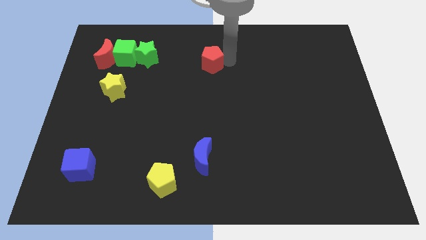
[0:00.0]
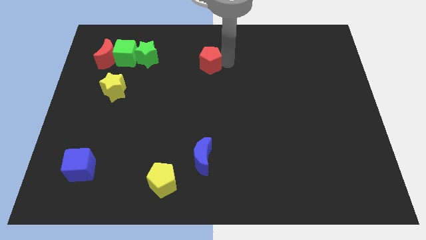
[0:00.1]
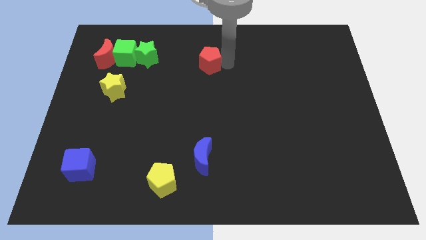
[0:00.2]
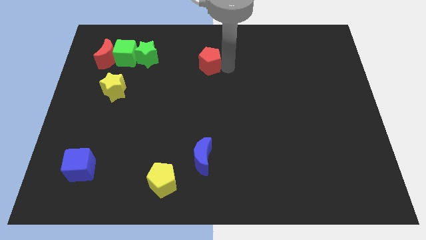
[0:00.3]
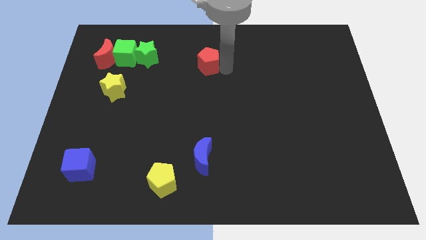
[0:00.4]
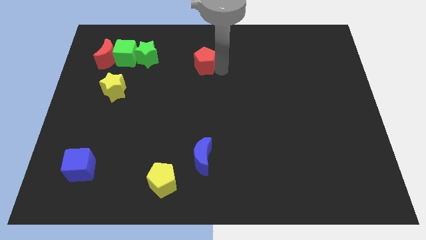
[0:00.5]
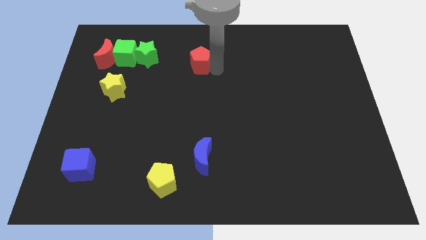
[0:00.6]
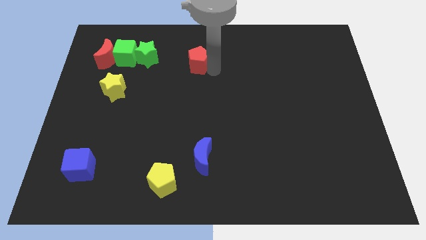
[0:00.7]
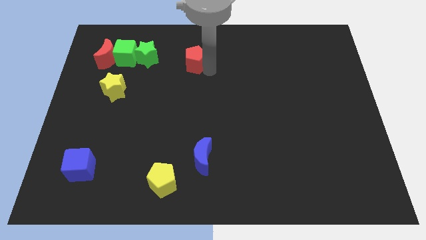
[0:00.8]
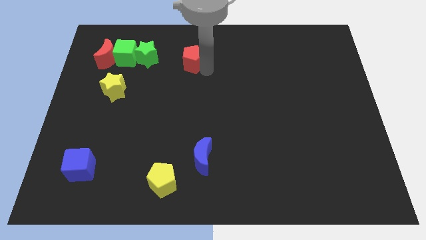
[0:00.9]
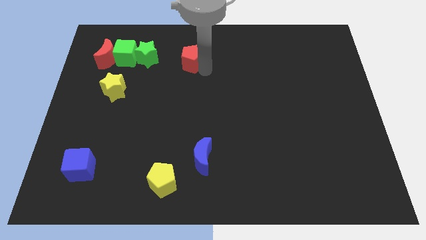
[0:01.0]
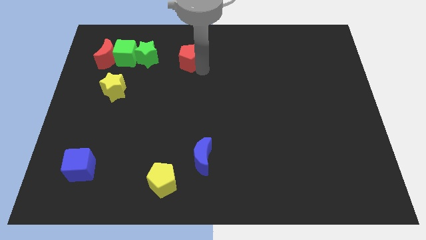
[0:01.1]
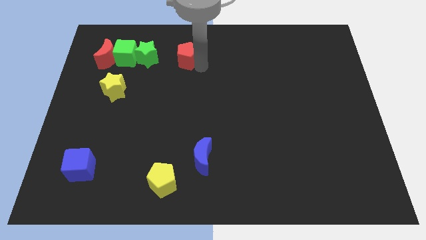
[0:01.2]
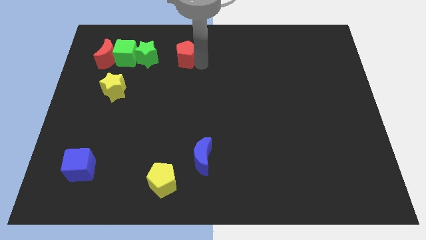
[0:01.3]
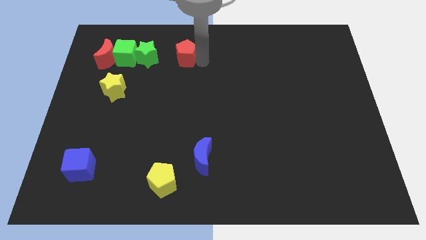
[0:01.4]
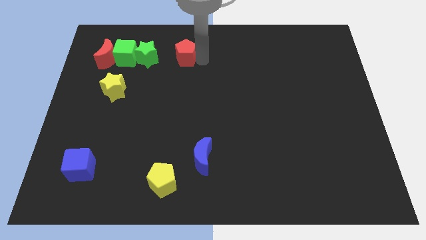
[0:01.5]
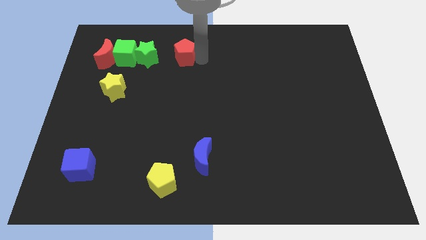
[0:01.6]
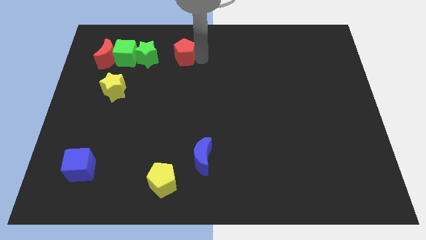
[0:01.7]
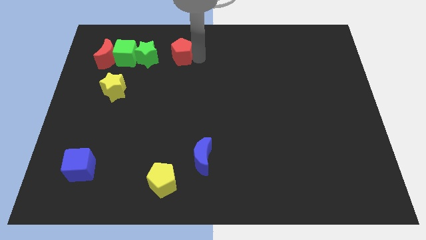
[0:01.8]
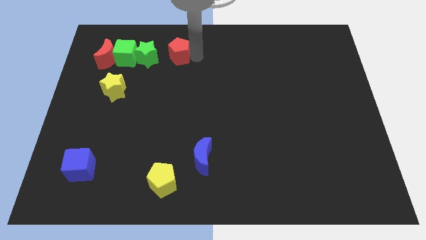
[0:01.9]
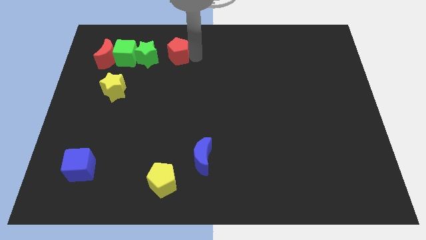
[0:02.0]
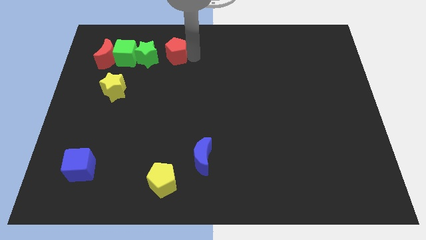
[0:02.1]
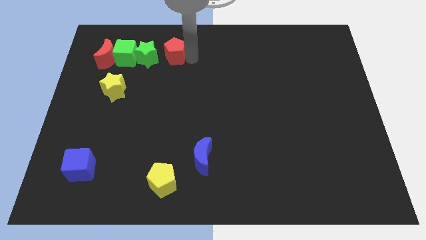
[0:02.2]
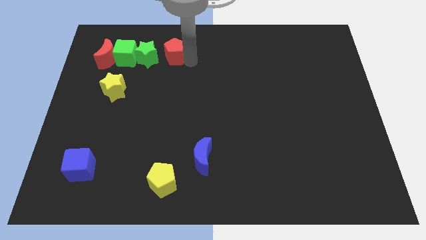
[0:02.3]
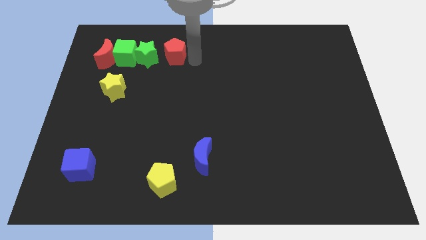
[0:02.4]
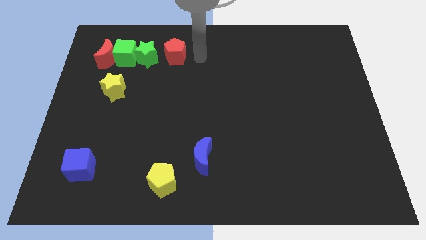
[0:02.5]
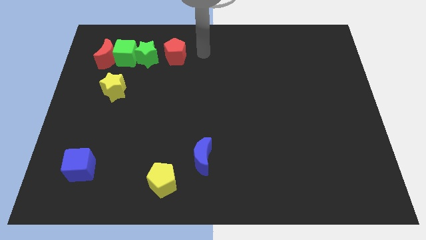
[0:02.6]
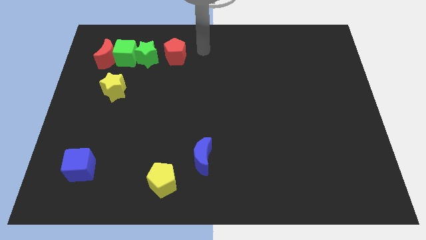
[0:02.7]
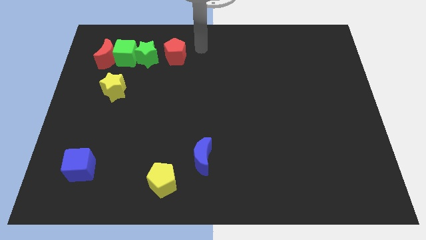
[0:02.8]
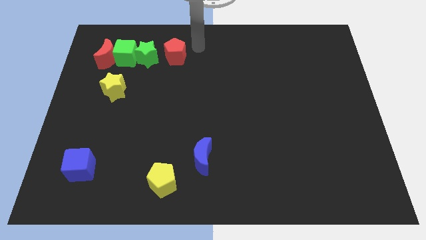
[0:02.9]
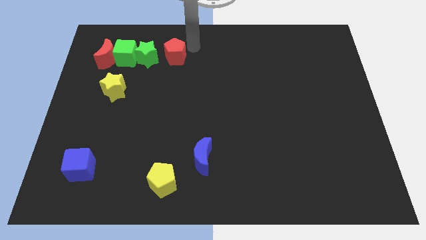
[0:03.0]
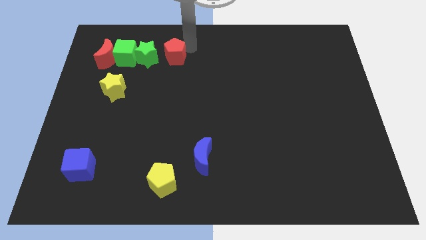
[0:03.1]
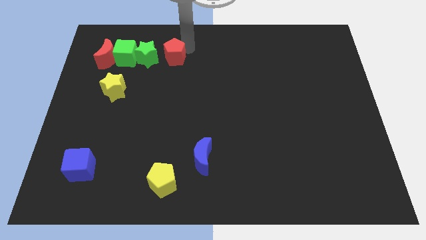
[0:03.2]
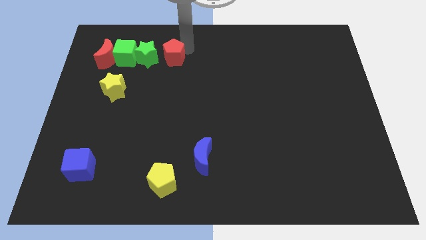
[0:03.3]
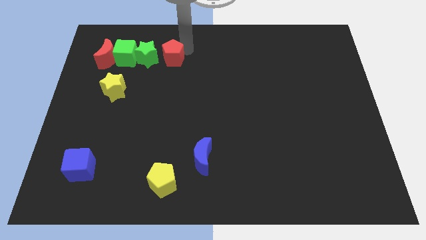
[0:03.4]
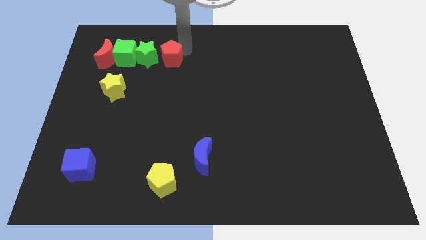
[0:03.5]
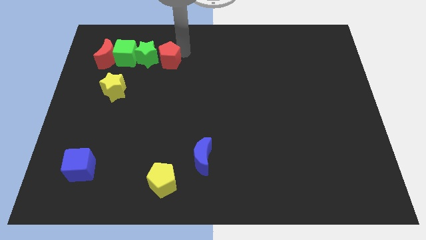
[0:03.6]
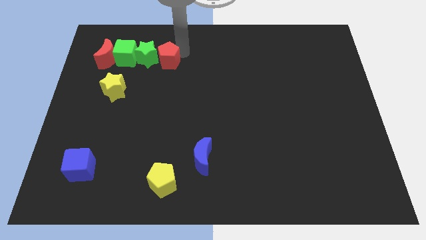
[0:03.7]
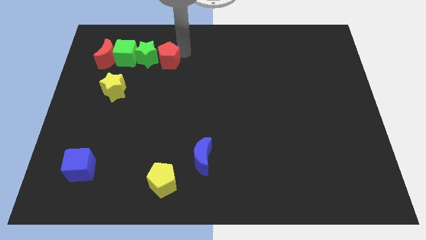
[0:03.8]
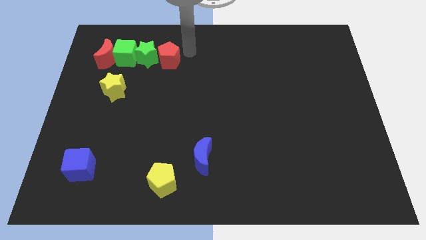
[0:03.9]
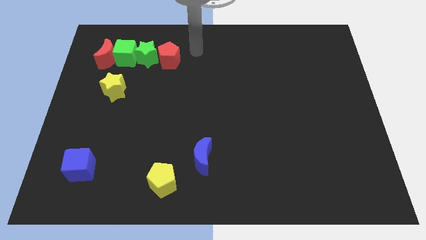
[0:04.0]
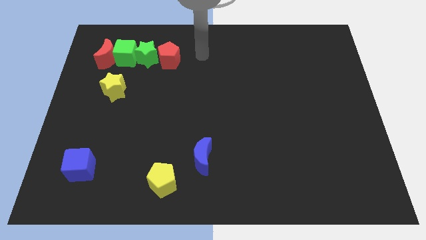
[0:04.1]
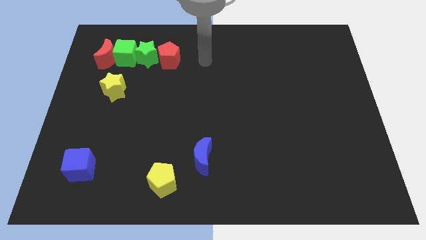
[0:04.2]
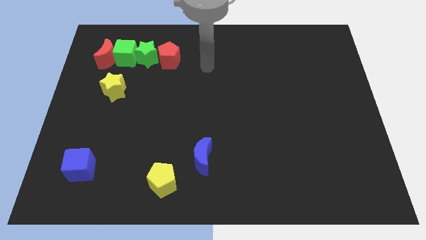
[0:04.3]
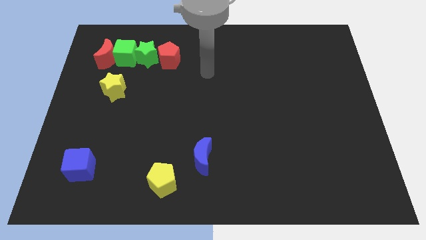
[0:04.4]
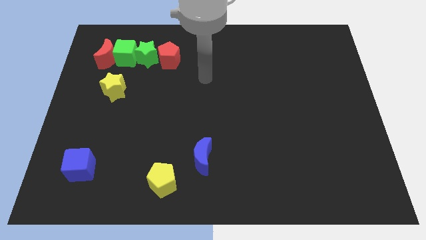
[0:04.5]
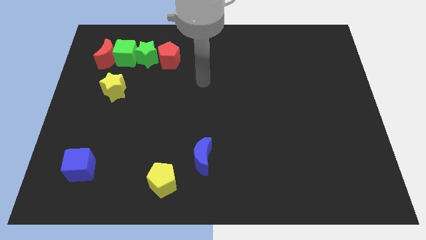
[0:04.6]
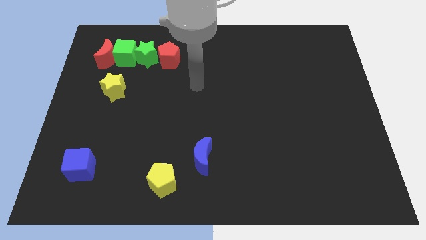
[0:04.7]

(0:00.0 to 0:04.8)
move the red pentagon closer to the green star

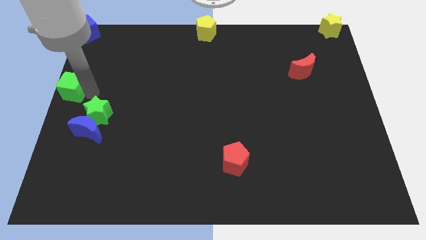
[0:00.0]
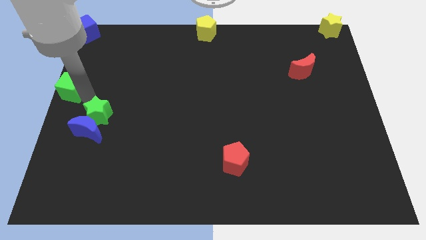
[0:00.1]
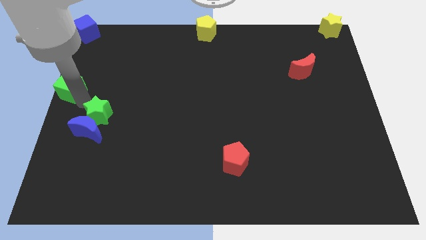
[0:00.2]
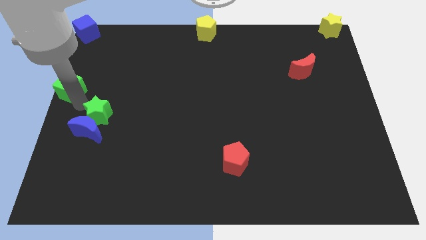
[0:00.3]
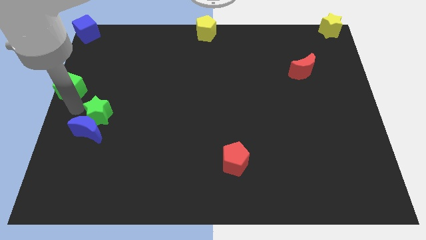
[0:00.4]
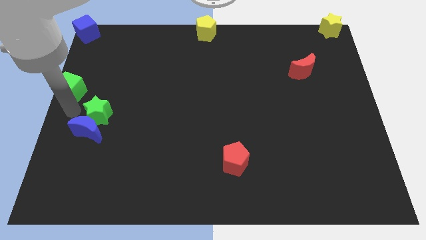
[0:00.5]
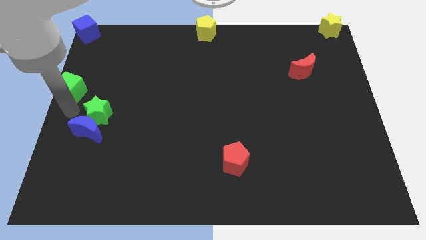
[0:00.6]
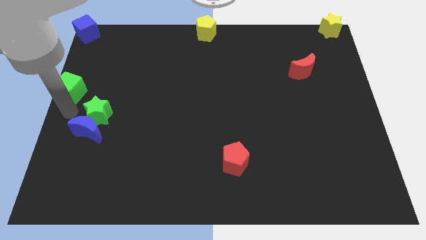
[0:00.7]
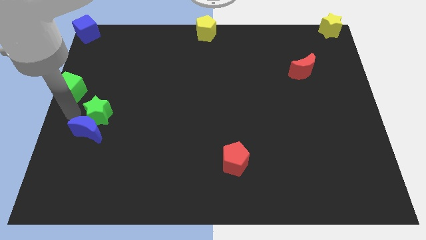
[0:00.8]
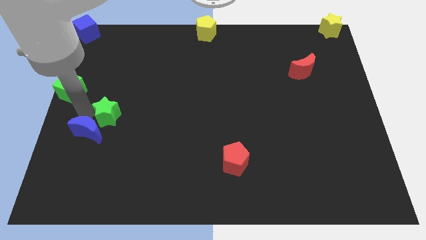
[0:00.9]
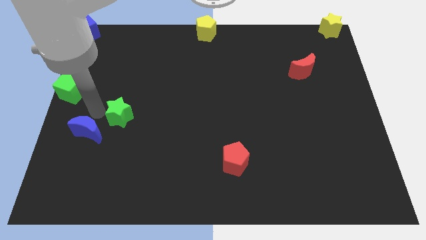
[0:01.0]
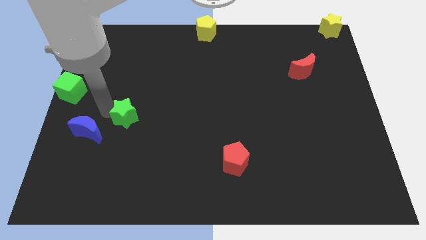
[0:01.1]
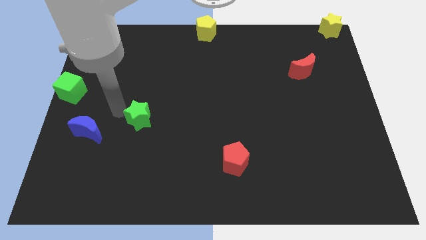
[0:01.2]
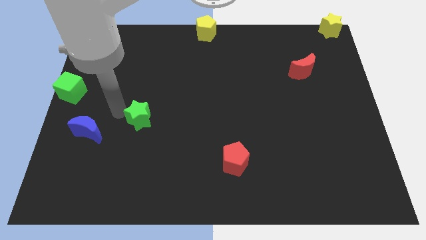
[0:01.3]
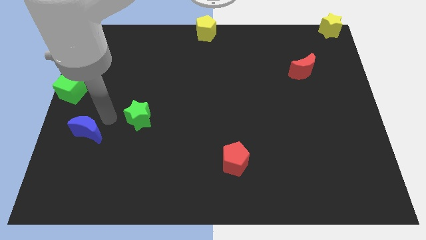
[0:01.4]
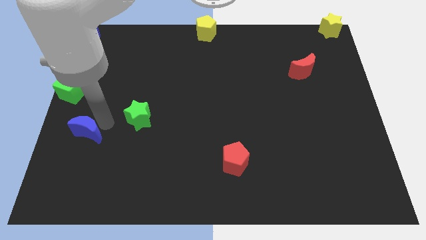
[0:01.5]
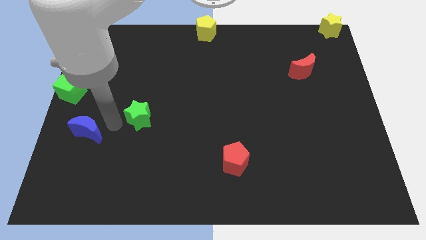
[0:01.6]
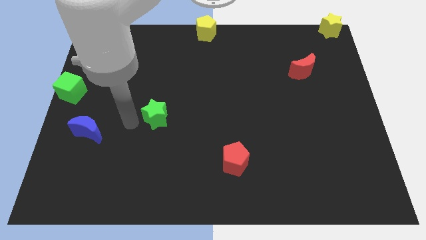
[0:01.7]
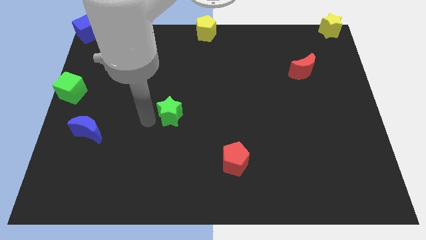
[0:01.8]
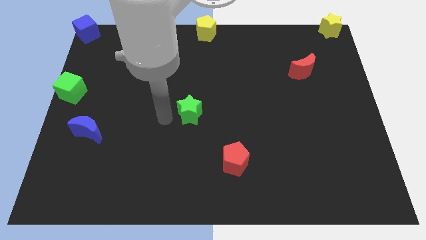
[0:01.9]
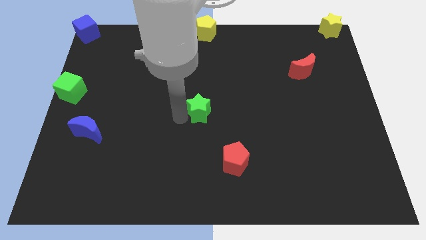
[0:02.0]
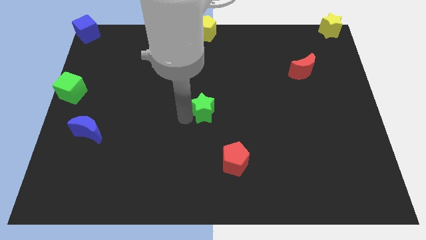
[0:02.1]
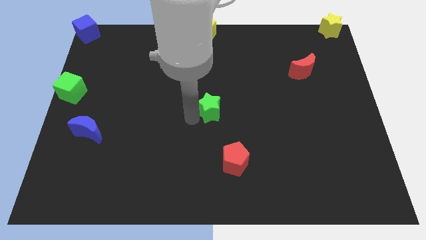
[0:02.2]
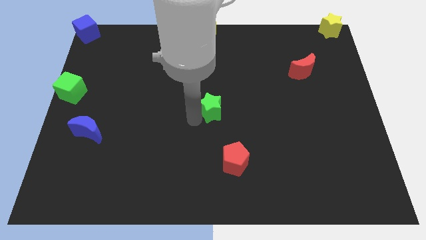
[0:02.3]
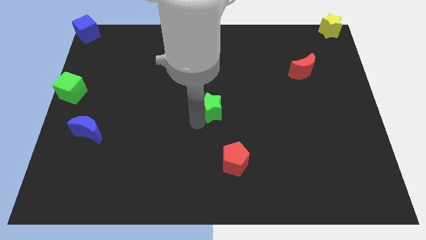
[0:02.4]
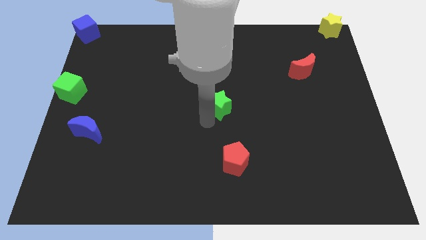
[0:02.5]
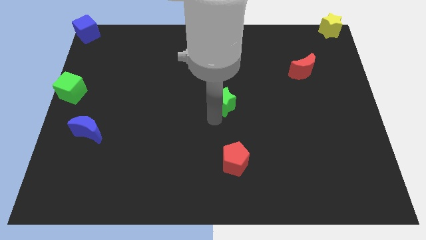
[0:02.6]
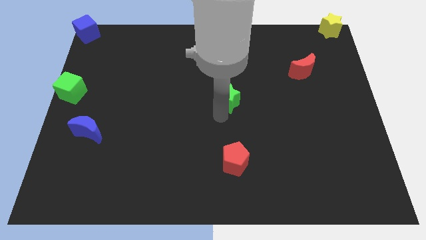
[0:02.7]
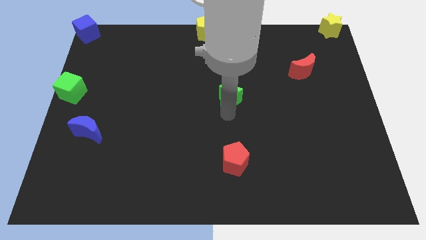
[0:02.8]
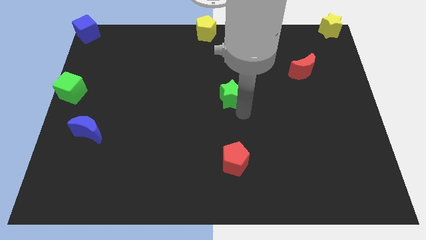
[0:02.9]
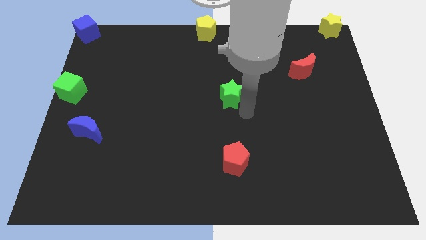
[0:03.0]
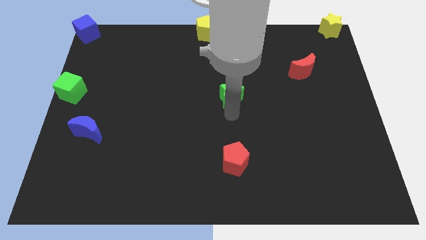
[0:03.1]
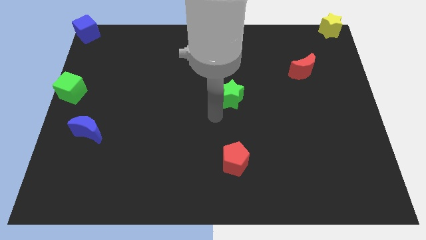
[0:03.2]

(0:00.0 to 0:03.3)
place the green star on top of red pentagon

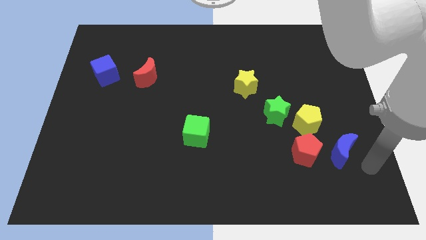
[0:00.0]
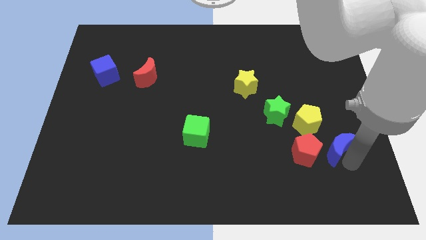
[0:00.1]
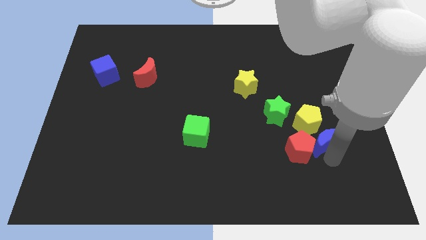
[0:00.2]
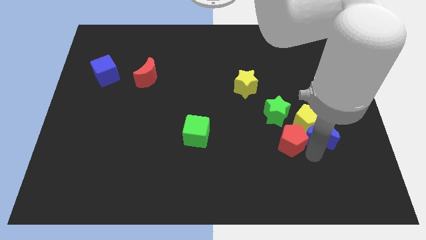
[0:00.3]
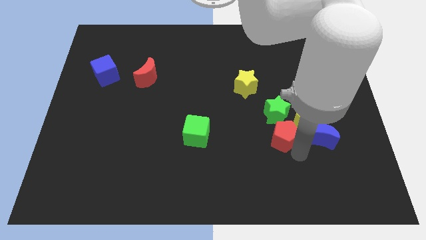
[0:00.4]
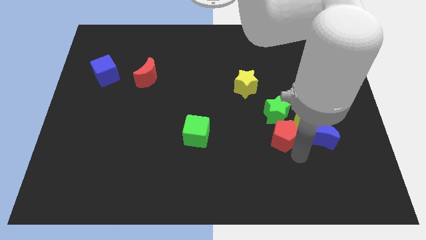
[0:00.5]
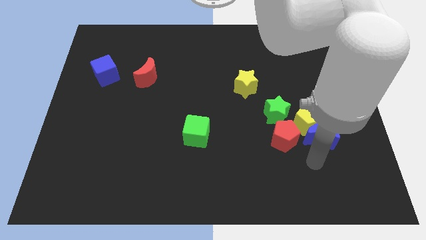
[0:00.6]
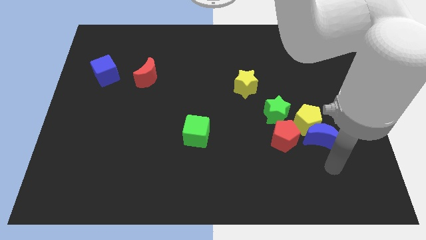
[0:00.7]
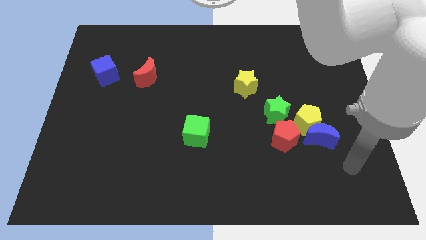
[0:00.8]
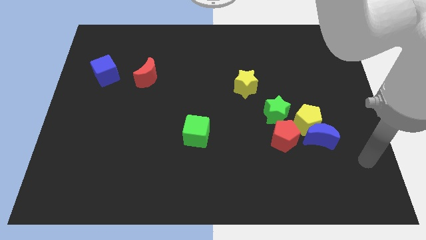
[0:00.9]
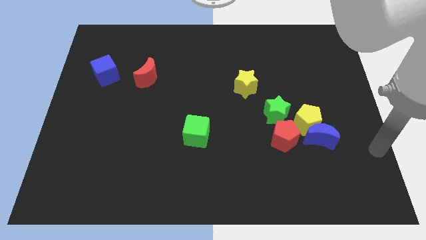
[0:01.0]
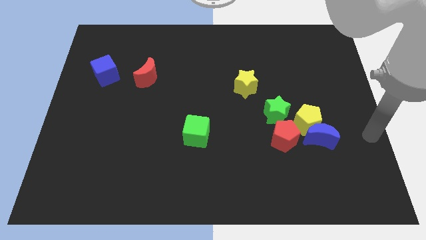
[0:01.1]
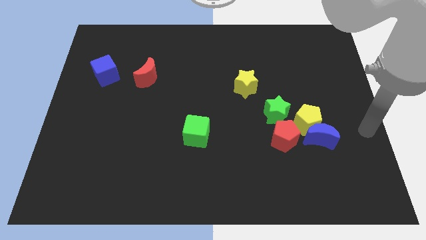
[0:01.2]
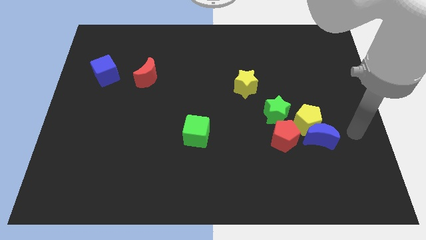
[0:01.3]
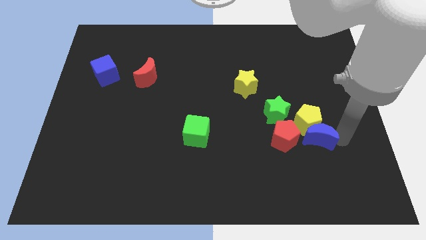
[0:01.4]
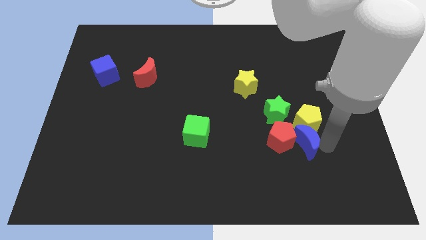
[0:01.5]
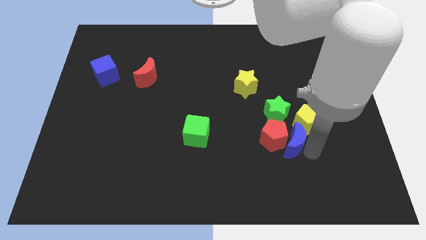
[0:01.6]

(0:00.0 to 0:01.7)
push the red pentagon and blue crescent to the right side of the green cube
